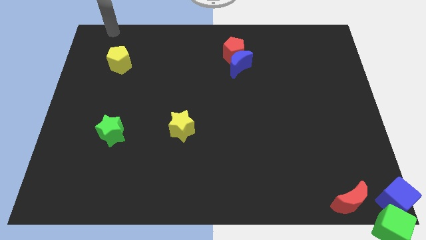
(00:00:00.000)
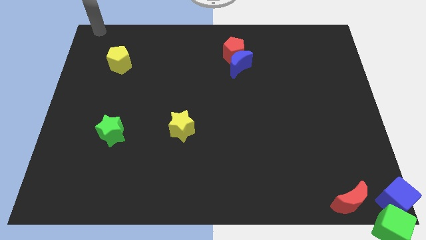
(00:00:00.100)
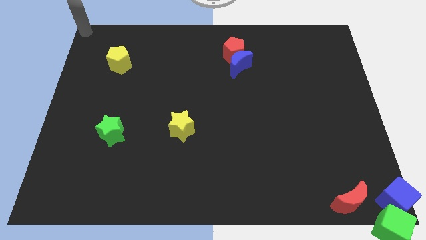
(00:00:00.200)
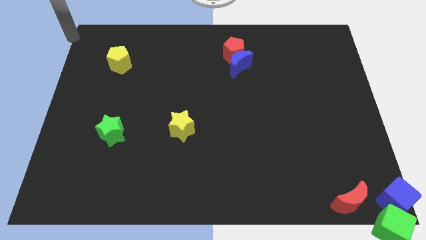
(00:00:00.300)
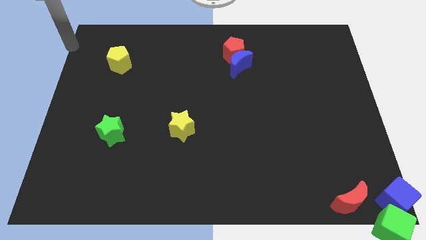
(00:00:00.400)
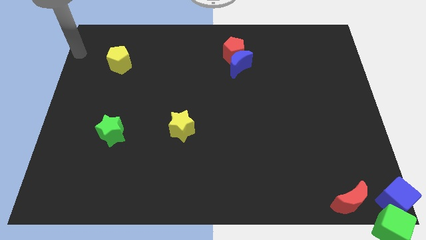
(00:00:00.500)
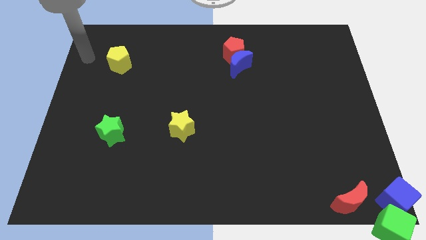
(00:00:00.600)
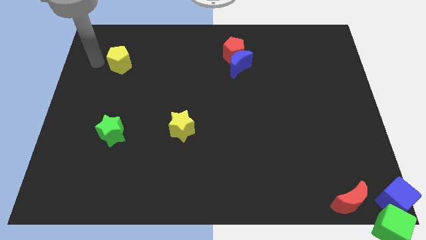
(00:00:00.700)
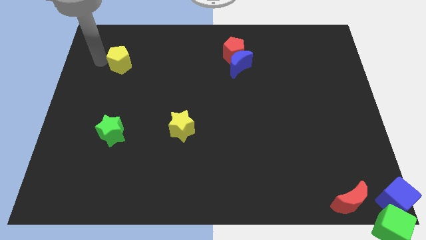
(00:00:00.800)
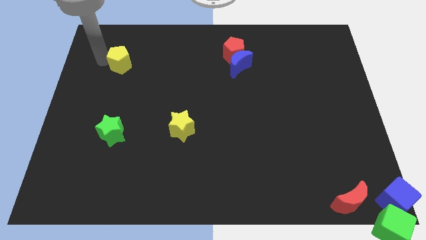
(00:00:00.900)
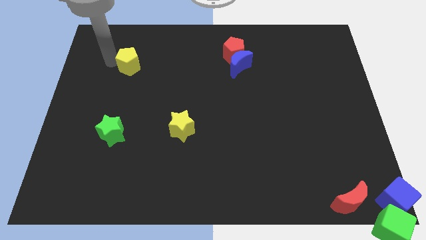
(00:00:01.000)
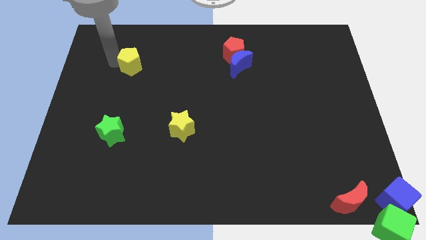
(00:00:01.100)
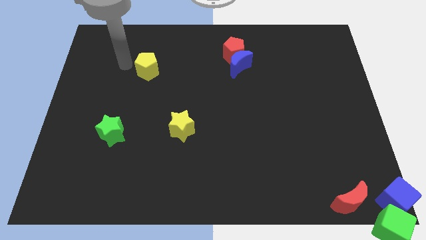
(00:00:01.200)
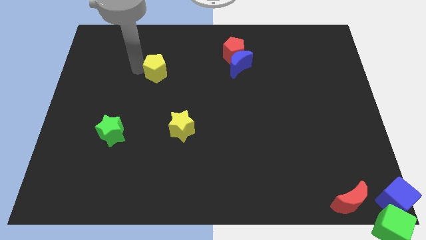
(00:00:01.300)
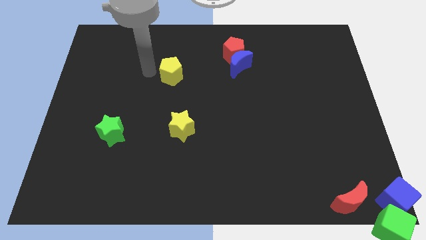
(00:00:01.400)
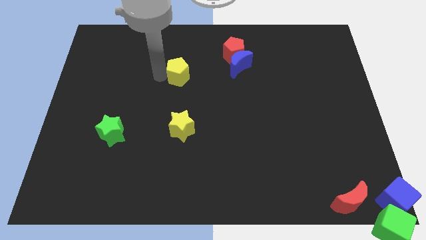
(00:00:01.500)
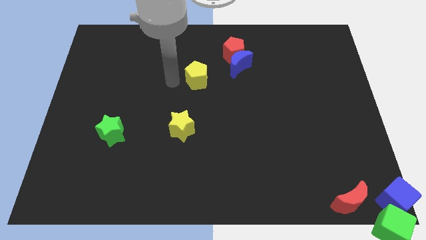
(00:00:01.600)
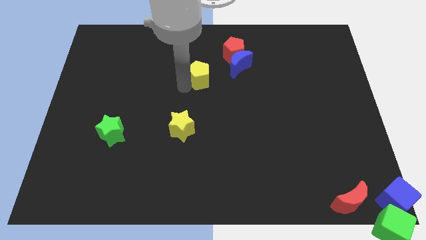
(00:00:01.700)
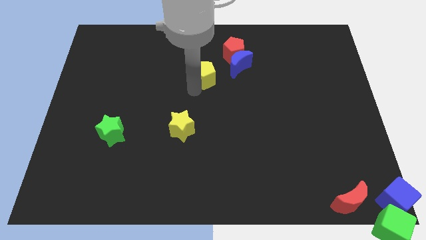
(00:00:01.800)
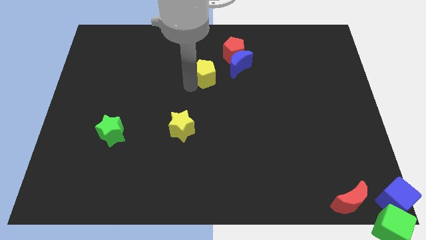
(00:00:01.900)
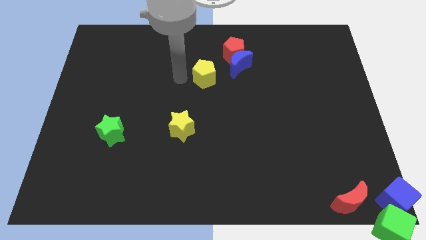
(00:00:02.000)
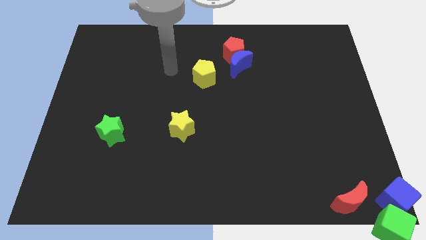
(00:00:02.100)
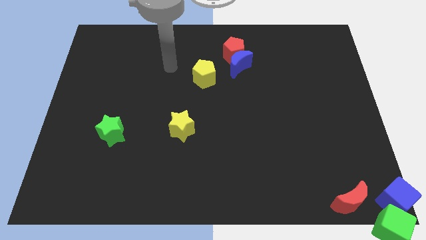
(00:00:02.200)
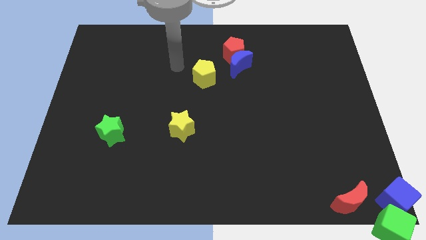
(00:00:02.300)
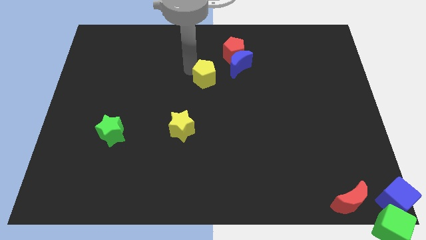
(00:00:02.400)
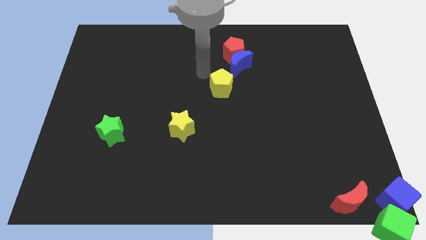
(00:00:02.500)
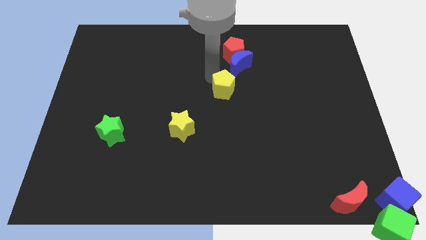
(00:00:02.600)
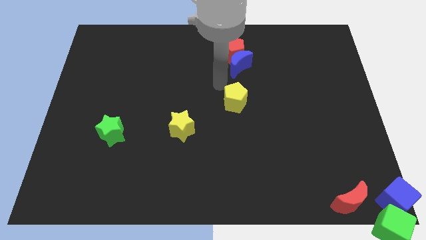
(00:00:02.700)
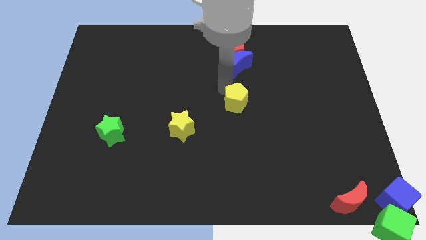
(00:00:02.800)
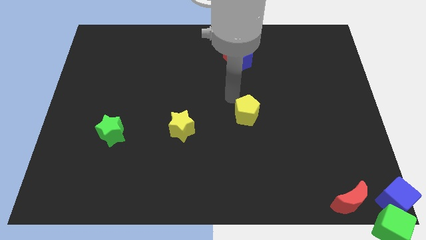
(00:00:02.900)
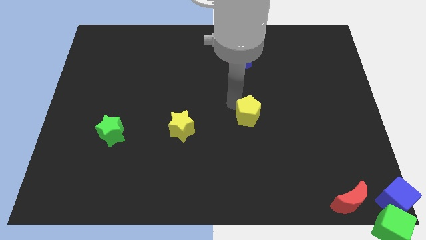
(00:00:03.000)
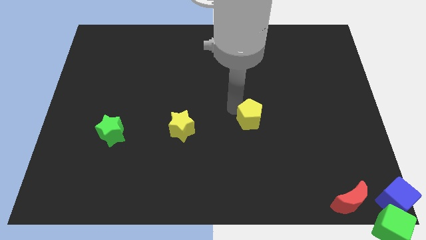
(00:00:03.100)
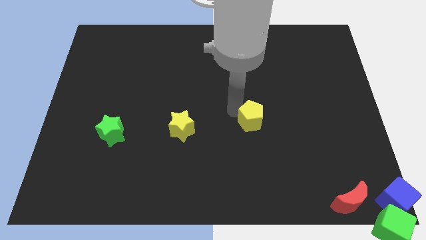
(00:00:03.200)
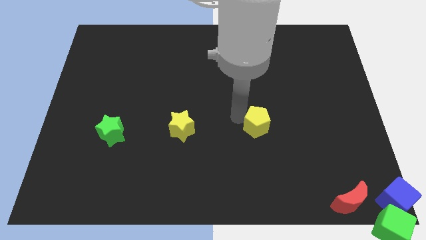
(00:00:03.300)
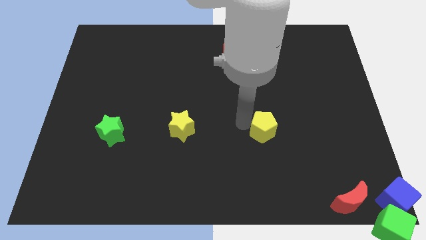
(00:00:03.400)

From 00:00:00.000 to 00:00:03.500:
move the yellow pentagon to the horizontal right of the yellow star

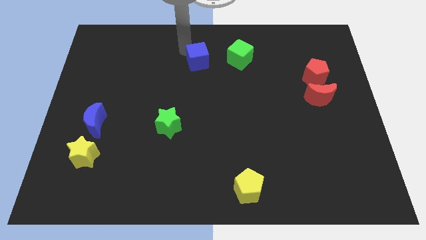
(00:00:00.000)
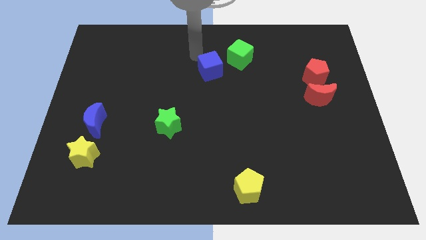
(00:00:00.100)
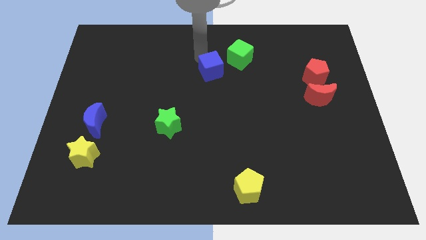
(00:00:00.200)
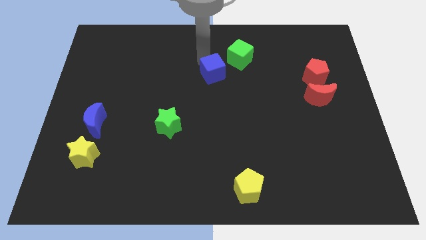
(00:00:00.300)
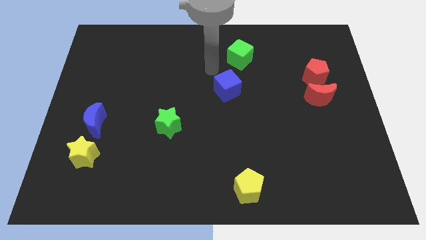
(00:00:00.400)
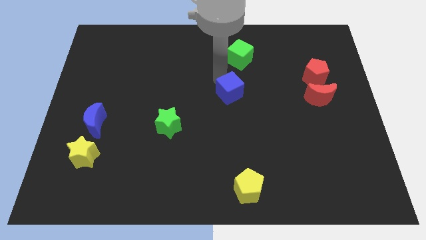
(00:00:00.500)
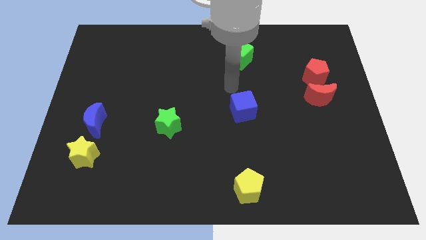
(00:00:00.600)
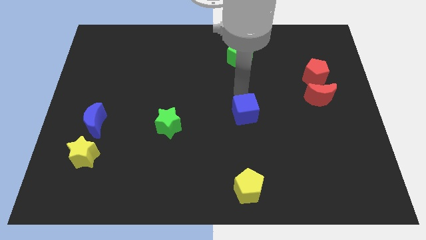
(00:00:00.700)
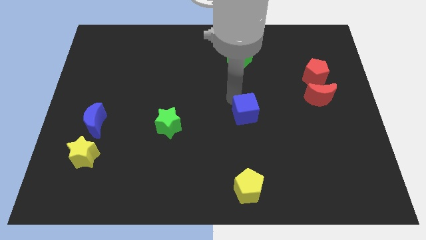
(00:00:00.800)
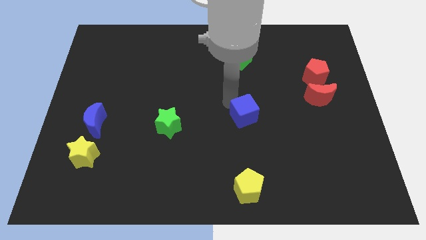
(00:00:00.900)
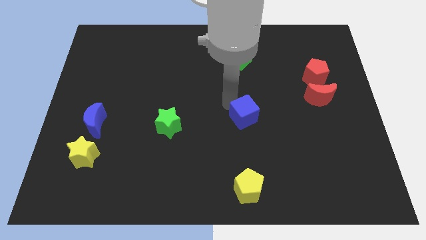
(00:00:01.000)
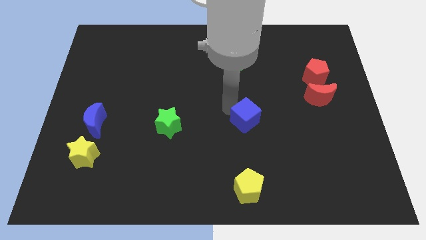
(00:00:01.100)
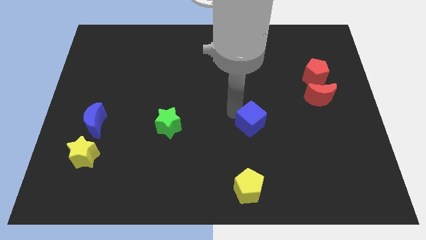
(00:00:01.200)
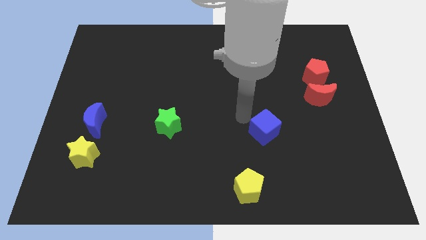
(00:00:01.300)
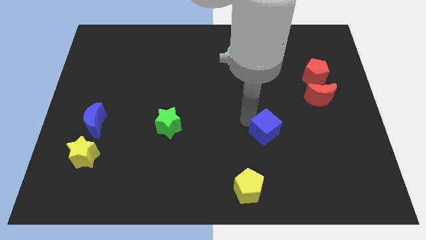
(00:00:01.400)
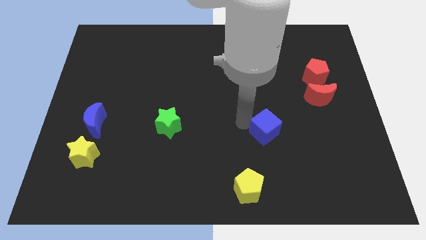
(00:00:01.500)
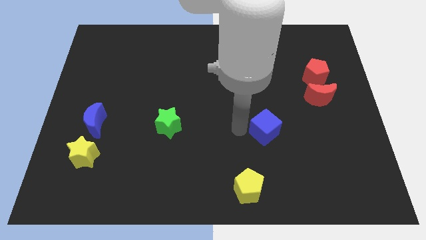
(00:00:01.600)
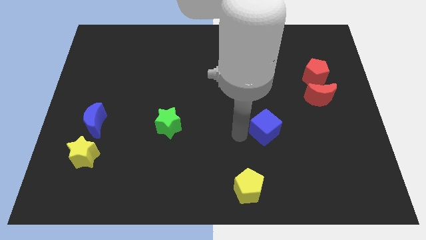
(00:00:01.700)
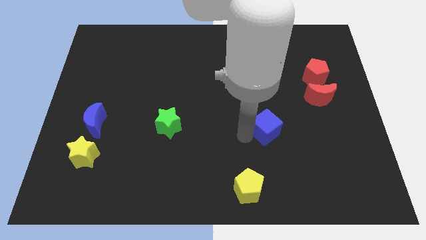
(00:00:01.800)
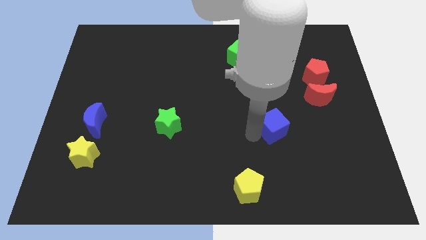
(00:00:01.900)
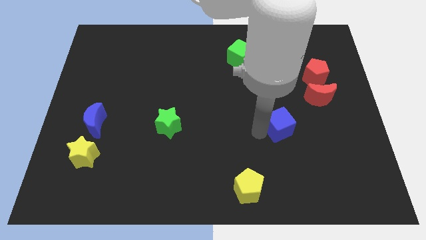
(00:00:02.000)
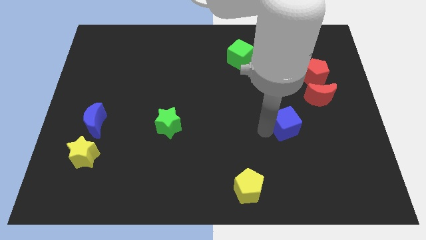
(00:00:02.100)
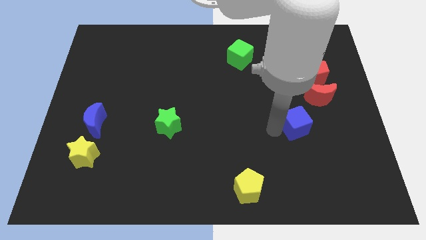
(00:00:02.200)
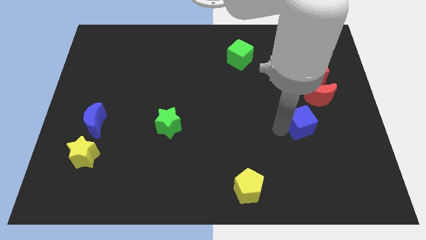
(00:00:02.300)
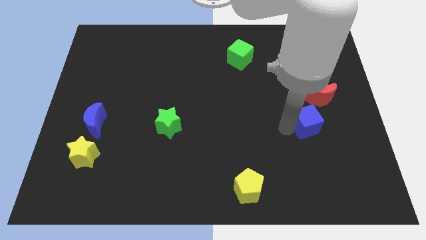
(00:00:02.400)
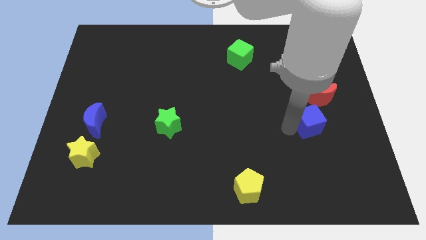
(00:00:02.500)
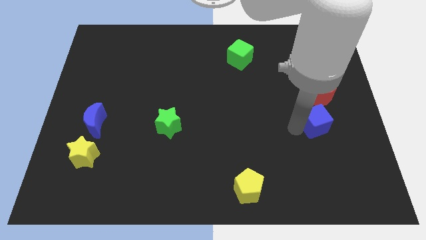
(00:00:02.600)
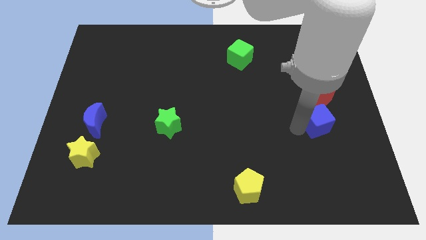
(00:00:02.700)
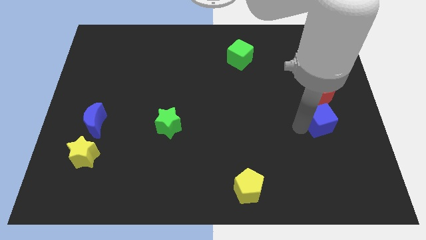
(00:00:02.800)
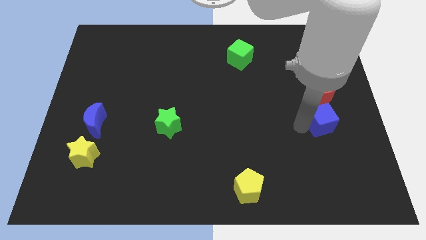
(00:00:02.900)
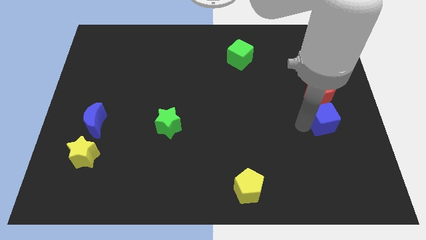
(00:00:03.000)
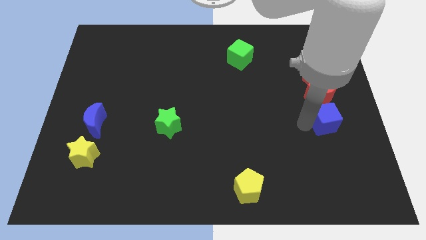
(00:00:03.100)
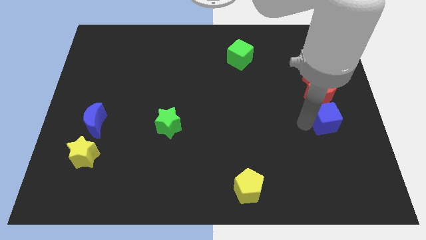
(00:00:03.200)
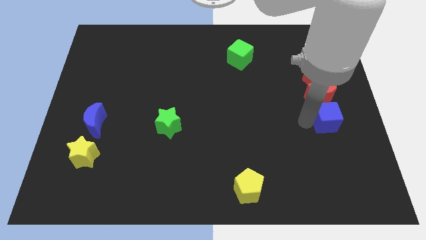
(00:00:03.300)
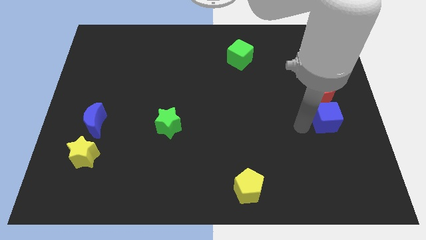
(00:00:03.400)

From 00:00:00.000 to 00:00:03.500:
place the blue cube below the red moon

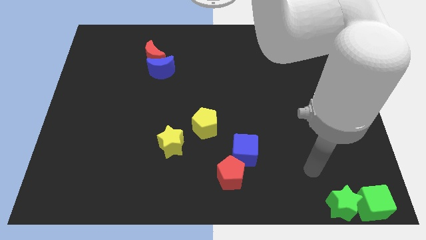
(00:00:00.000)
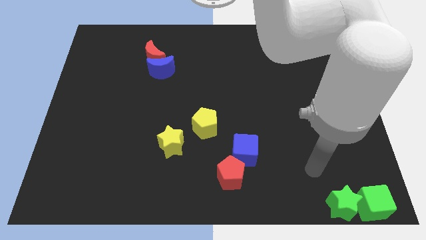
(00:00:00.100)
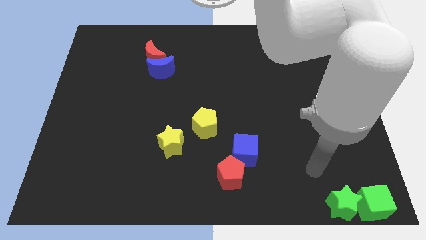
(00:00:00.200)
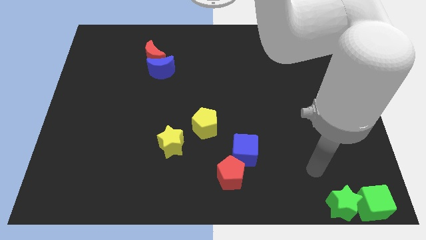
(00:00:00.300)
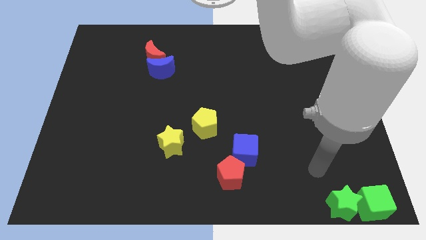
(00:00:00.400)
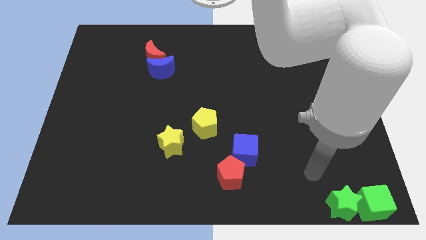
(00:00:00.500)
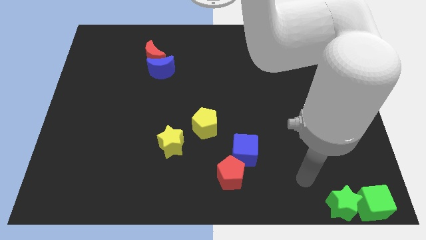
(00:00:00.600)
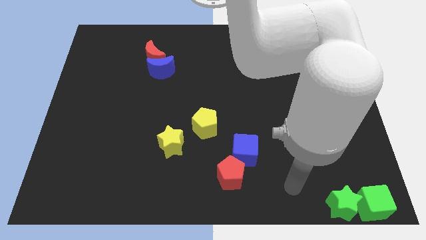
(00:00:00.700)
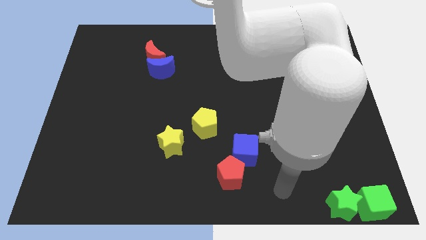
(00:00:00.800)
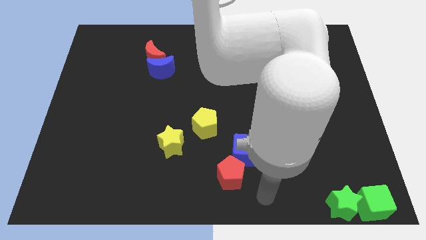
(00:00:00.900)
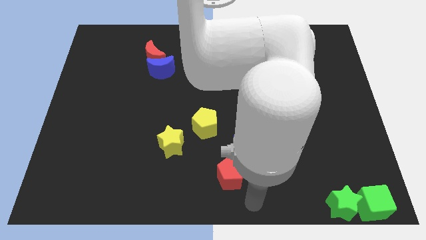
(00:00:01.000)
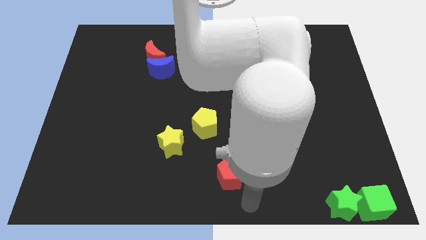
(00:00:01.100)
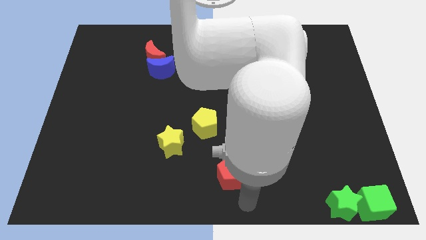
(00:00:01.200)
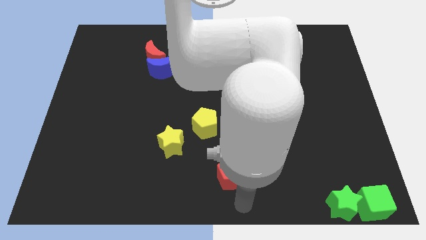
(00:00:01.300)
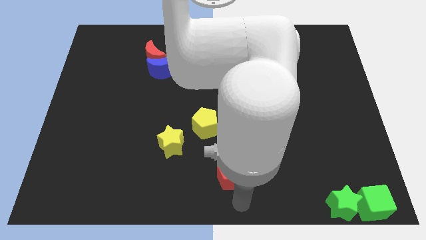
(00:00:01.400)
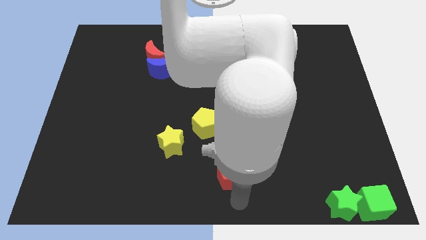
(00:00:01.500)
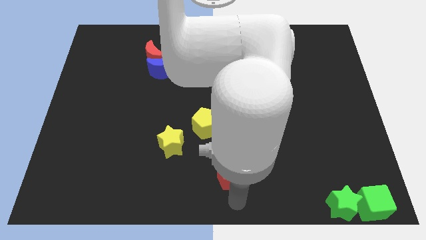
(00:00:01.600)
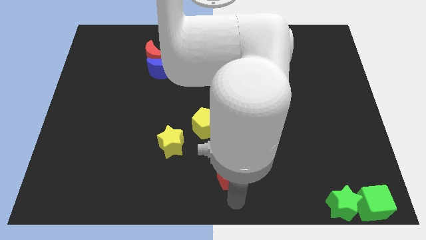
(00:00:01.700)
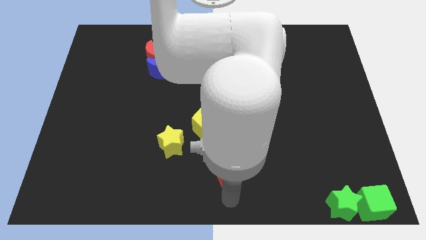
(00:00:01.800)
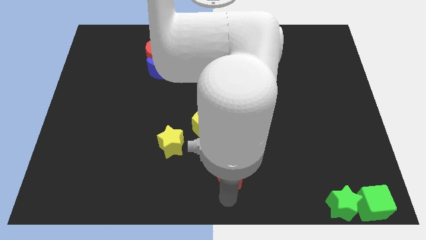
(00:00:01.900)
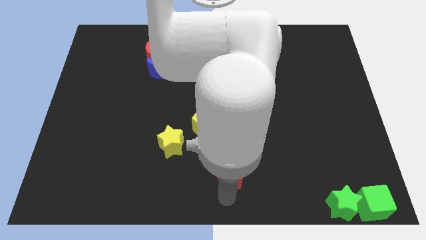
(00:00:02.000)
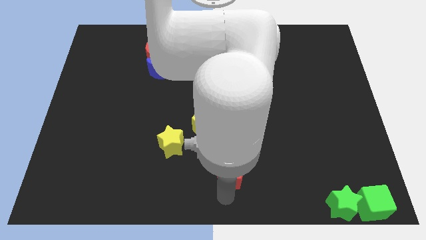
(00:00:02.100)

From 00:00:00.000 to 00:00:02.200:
point your hand below the red pentagon
